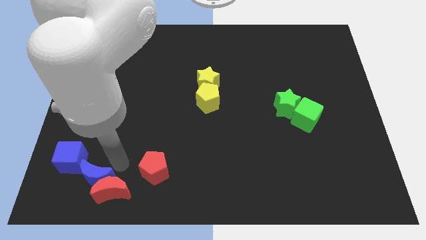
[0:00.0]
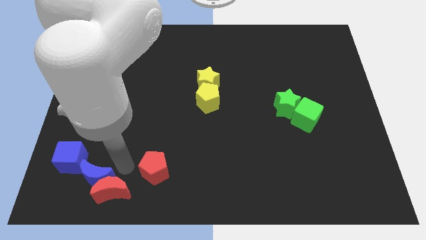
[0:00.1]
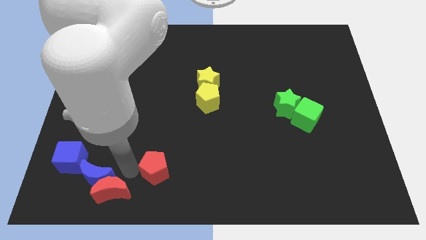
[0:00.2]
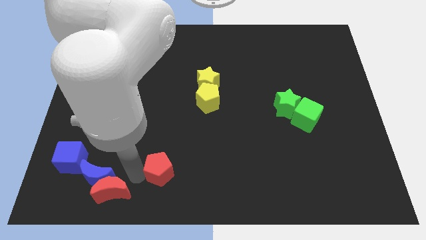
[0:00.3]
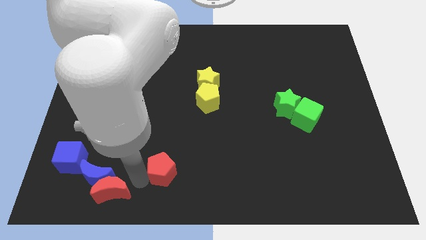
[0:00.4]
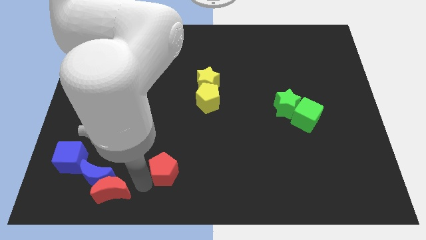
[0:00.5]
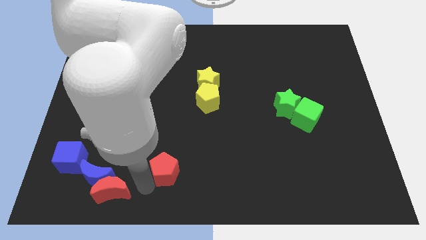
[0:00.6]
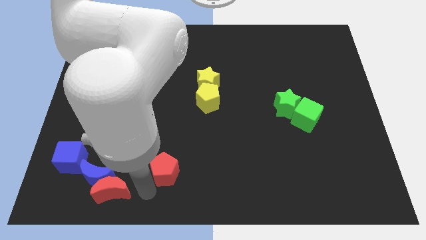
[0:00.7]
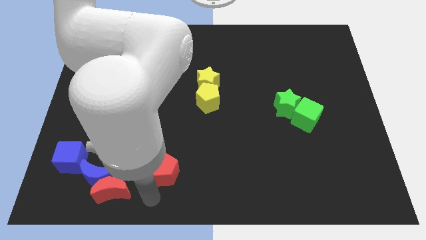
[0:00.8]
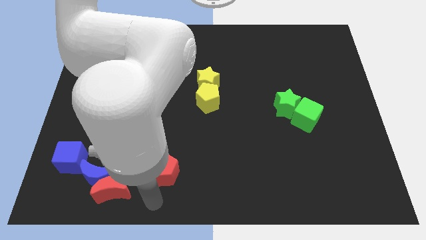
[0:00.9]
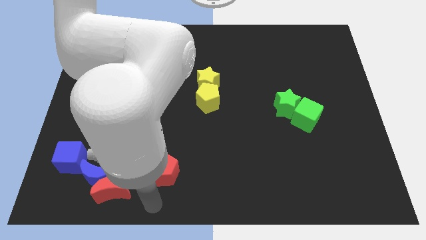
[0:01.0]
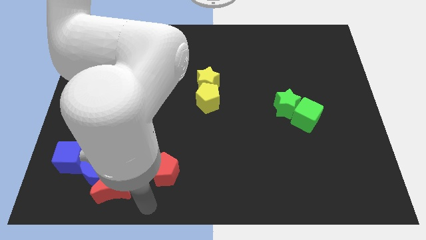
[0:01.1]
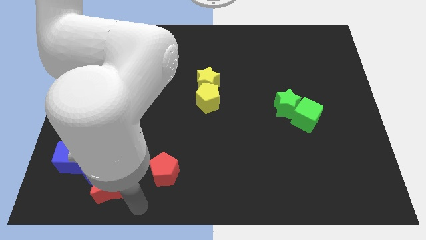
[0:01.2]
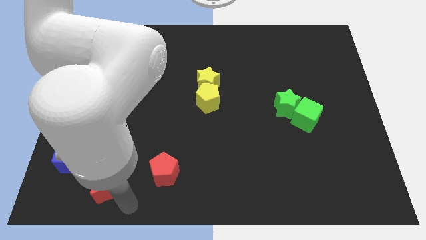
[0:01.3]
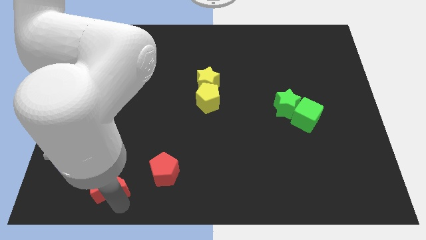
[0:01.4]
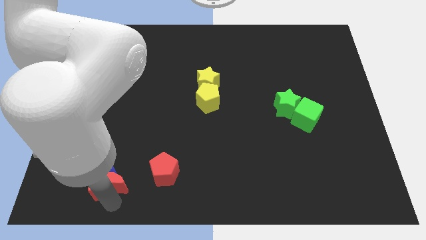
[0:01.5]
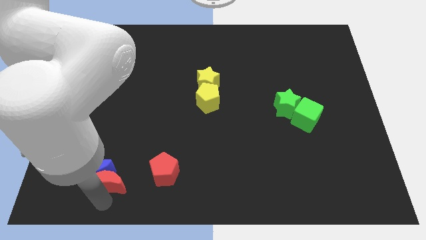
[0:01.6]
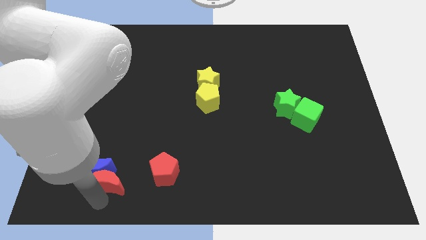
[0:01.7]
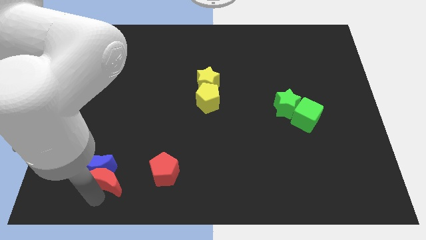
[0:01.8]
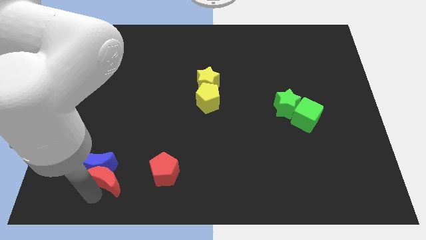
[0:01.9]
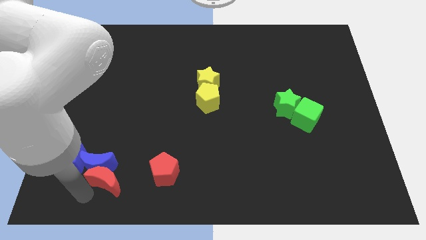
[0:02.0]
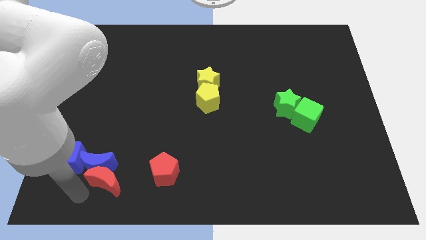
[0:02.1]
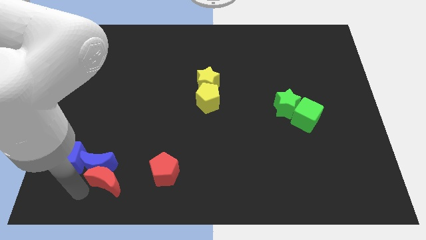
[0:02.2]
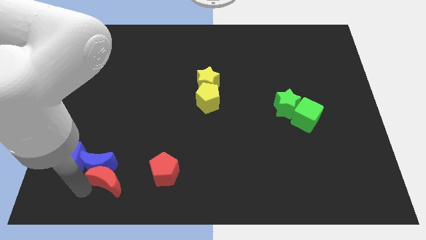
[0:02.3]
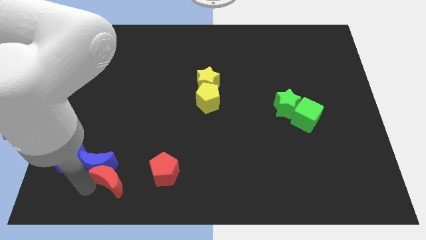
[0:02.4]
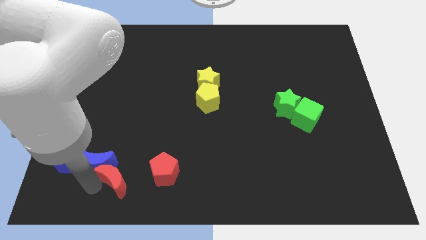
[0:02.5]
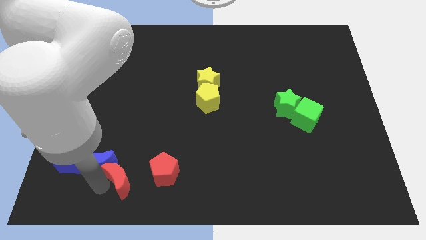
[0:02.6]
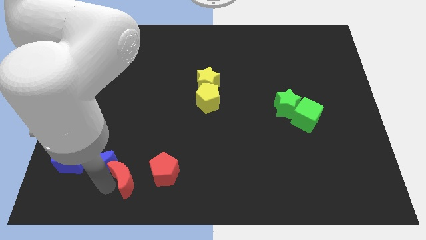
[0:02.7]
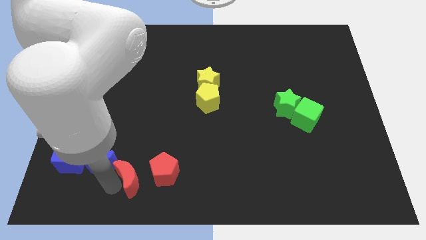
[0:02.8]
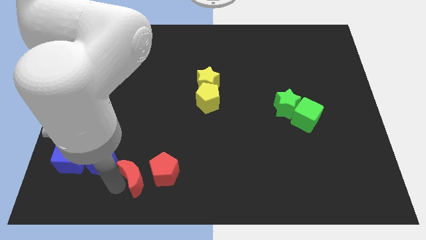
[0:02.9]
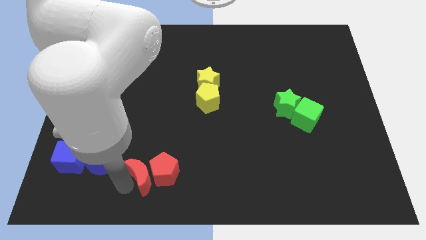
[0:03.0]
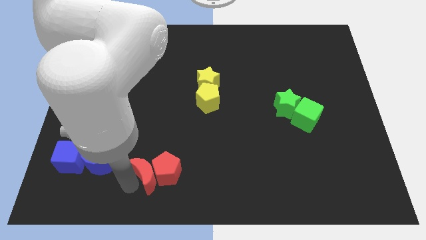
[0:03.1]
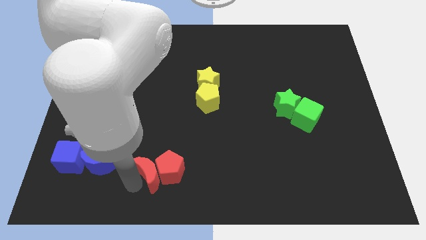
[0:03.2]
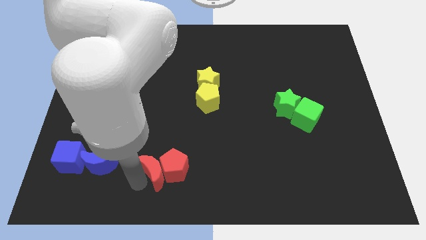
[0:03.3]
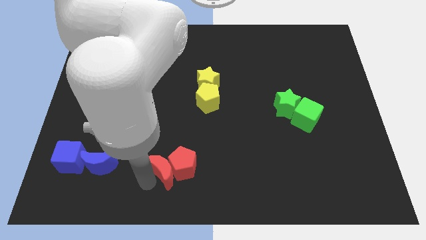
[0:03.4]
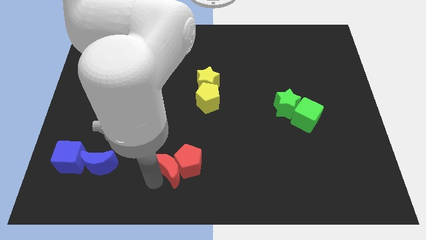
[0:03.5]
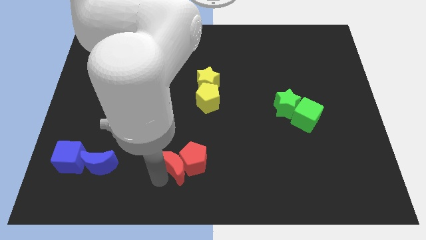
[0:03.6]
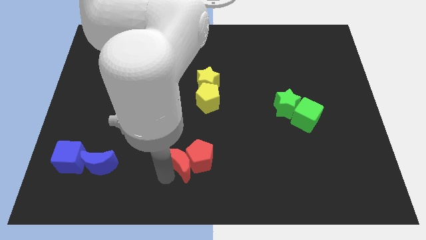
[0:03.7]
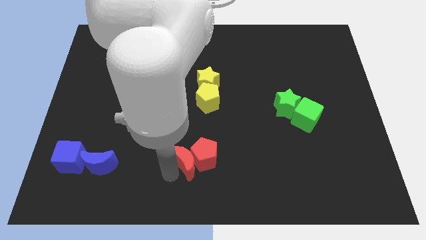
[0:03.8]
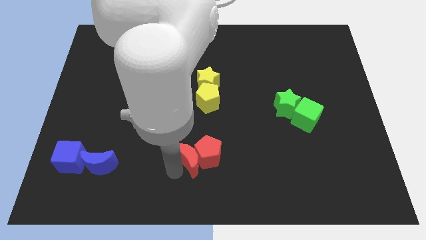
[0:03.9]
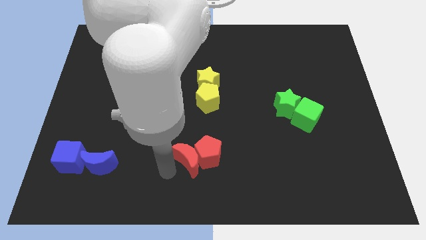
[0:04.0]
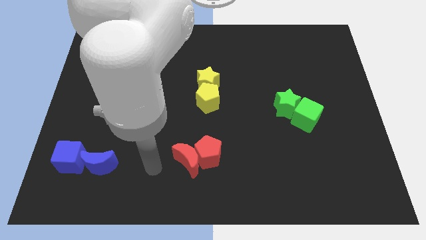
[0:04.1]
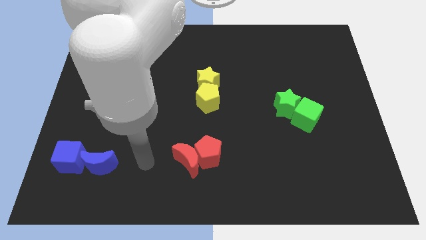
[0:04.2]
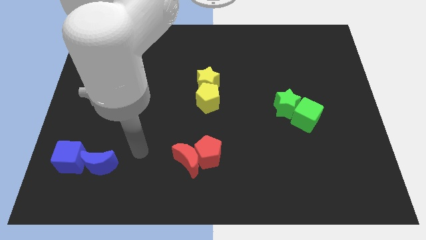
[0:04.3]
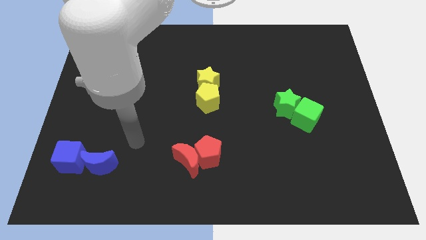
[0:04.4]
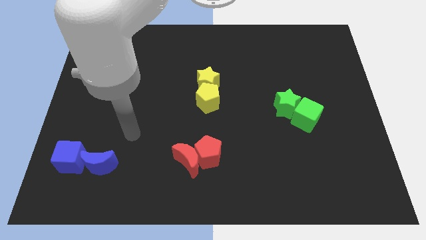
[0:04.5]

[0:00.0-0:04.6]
push red blocks to the bottom side of the yellow blocks

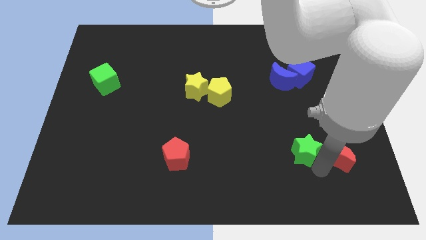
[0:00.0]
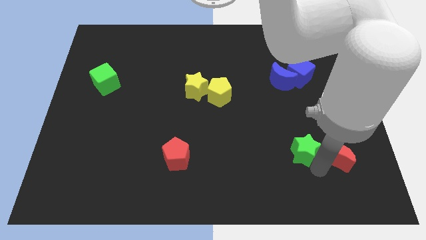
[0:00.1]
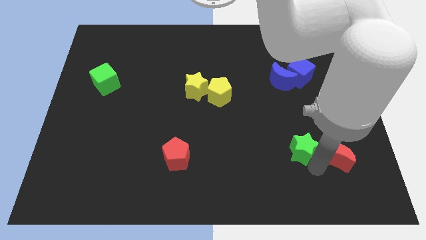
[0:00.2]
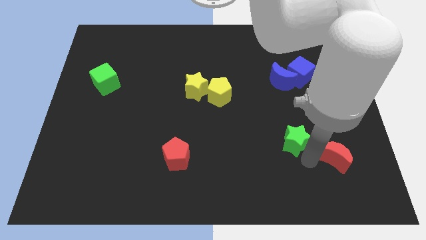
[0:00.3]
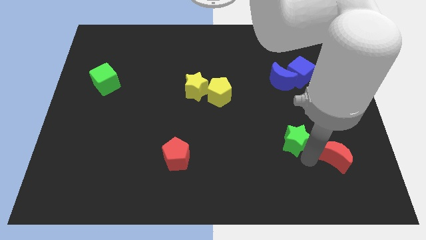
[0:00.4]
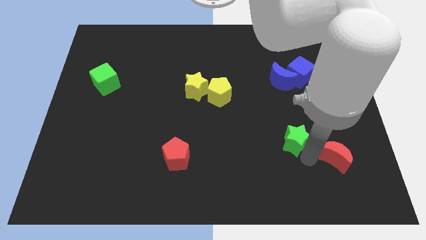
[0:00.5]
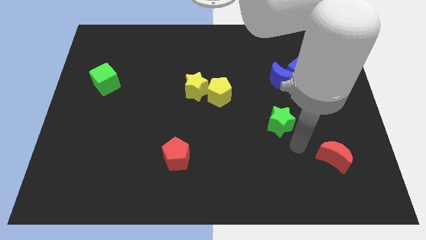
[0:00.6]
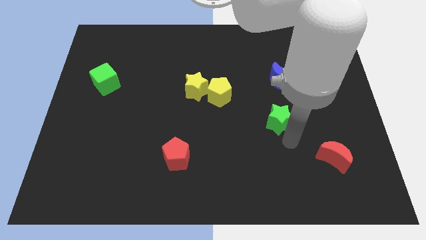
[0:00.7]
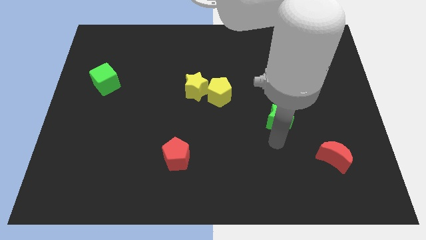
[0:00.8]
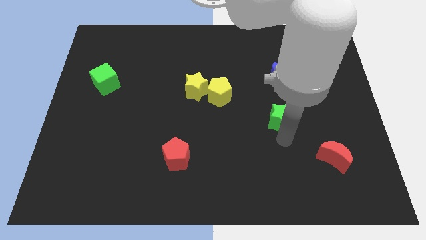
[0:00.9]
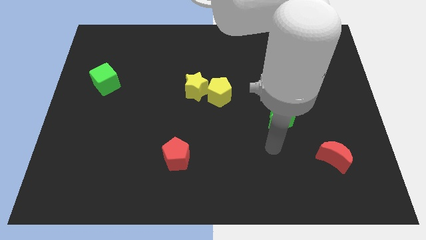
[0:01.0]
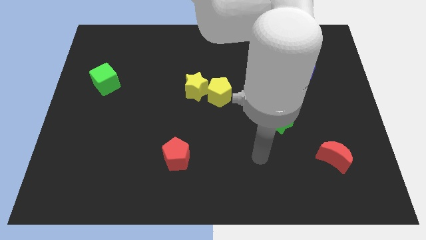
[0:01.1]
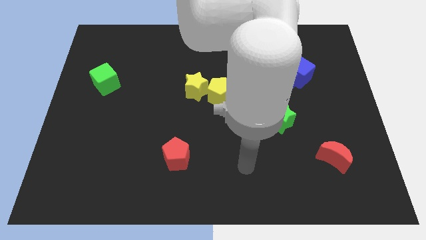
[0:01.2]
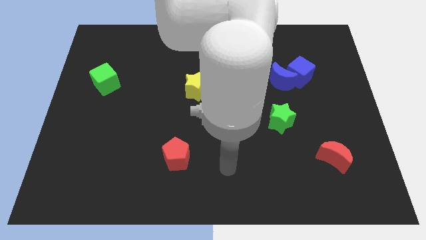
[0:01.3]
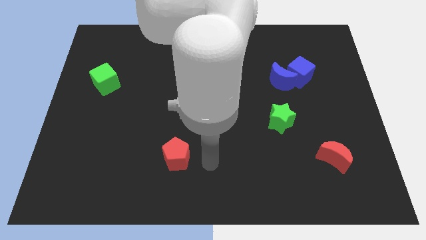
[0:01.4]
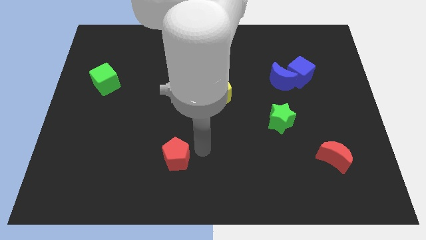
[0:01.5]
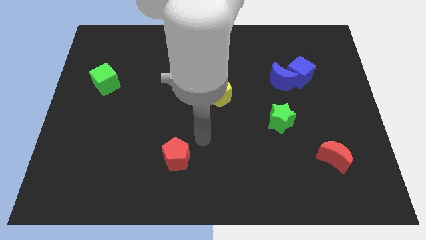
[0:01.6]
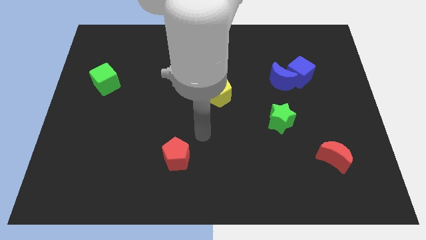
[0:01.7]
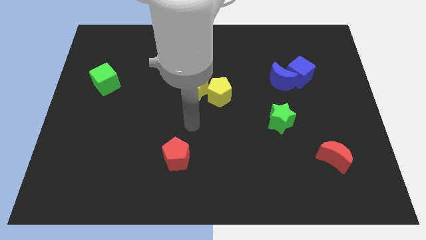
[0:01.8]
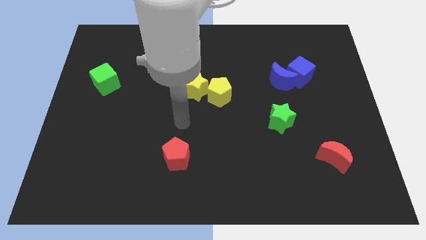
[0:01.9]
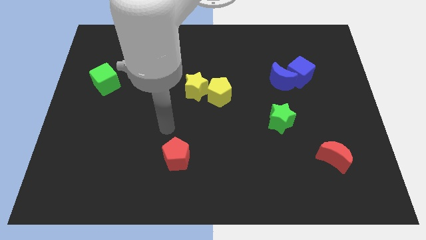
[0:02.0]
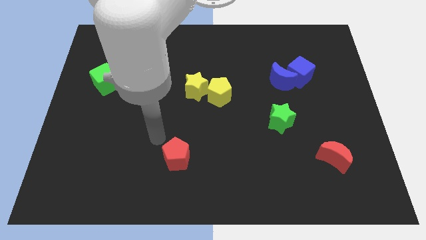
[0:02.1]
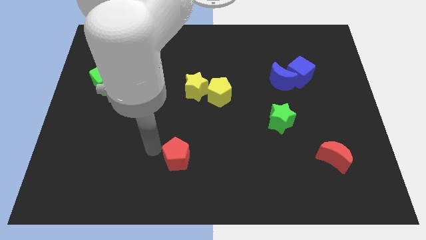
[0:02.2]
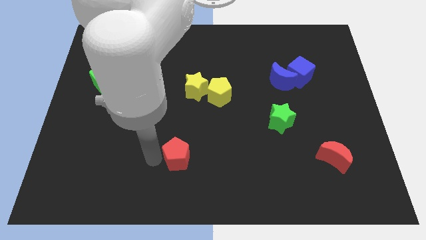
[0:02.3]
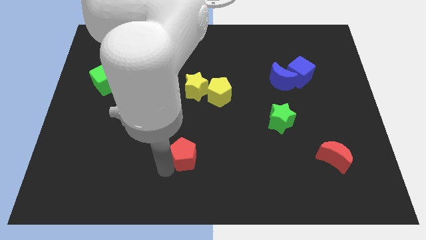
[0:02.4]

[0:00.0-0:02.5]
separate the green star from red moon

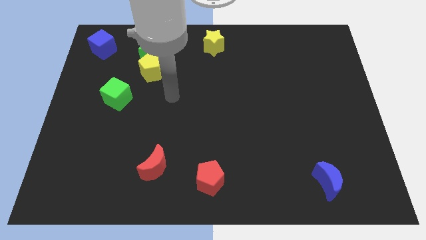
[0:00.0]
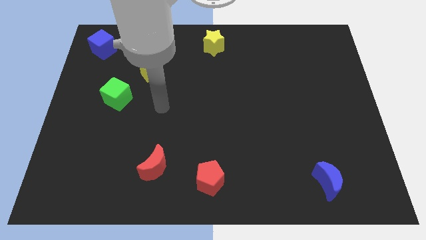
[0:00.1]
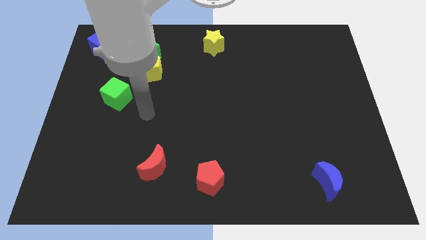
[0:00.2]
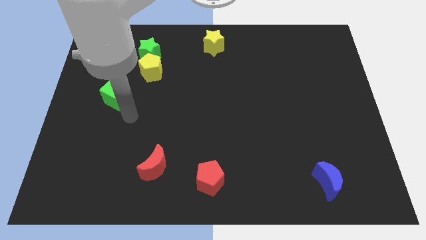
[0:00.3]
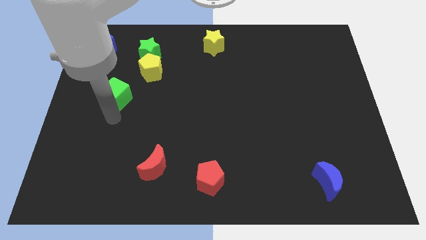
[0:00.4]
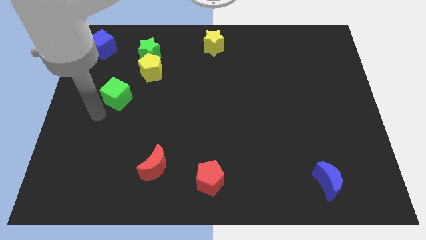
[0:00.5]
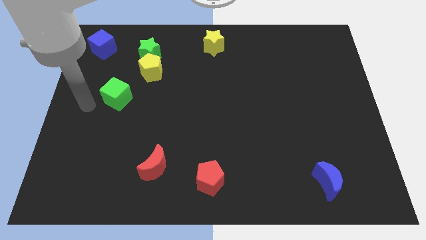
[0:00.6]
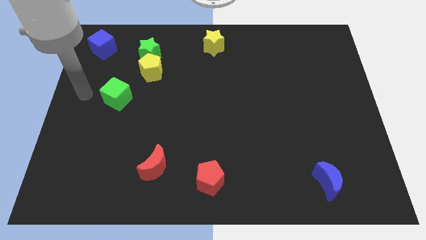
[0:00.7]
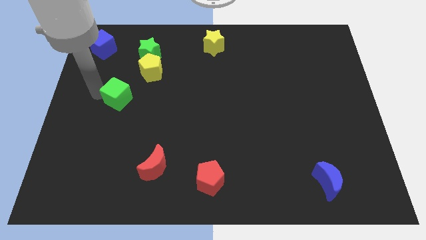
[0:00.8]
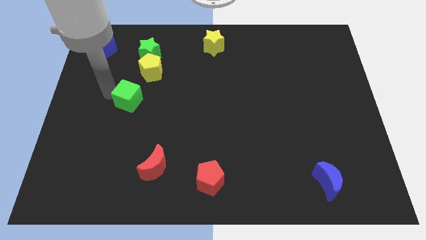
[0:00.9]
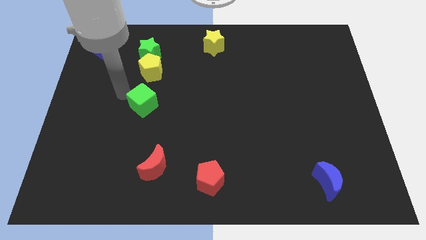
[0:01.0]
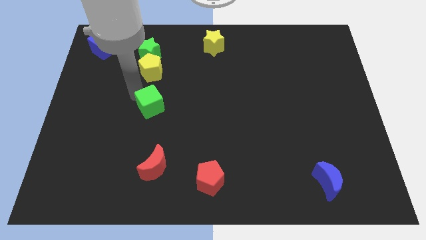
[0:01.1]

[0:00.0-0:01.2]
place the green cube below the yellow pentagon to form a line

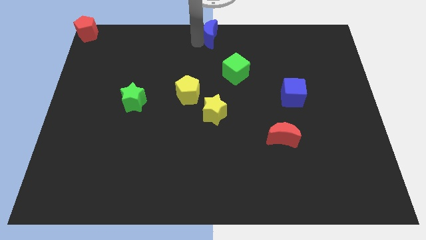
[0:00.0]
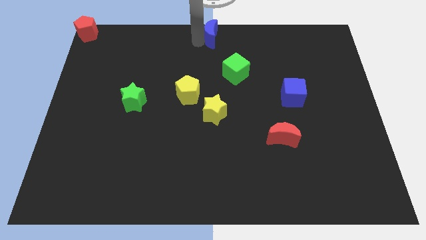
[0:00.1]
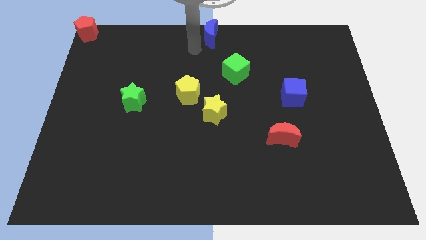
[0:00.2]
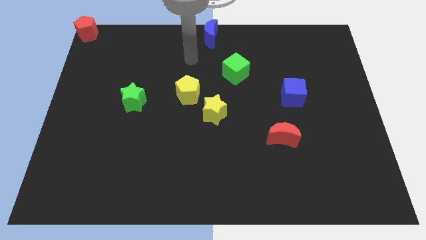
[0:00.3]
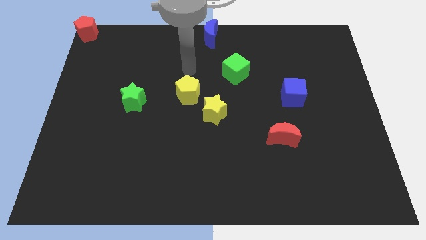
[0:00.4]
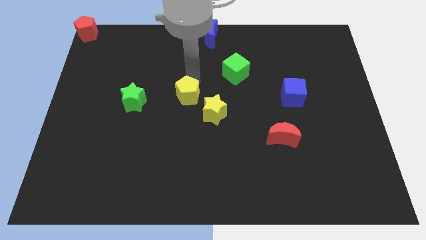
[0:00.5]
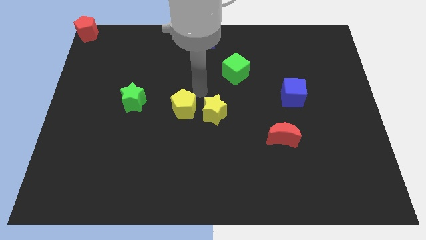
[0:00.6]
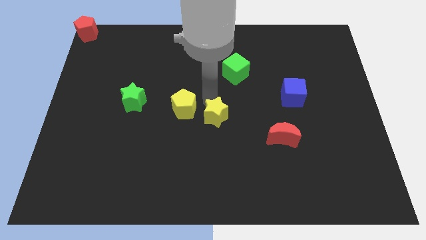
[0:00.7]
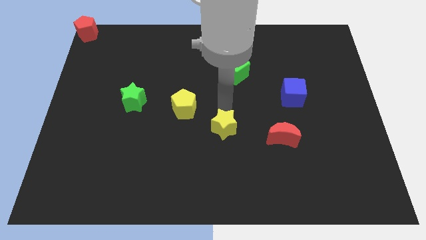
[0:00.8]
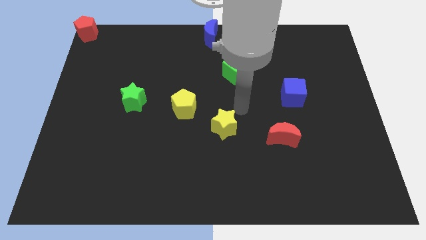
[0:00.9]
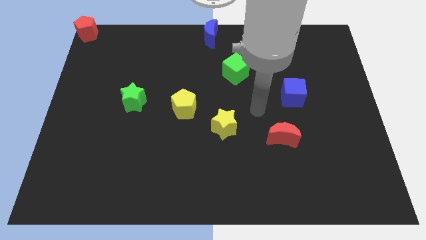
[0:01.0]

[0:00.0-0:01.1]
push the yellow blocks towards the bottom
